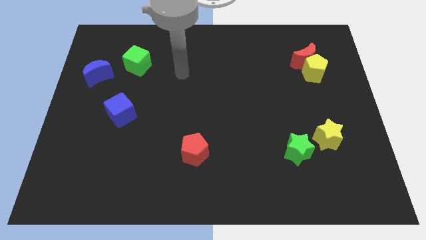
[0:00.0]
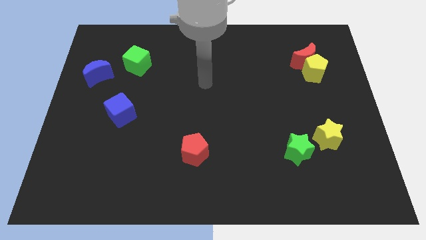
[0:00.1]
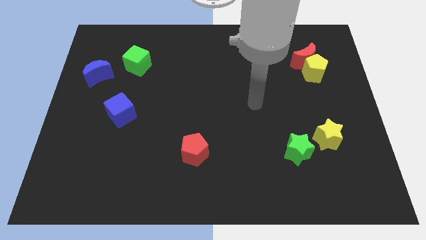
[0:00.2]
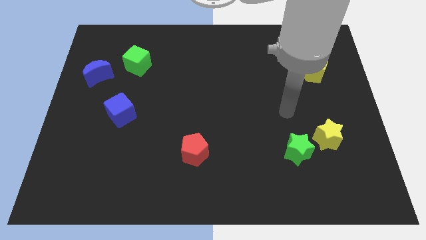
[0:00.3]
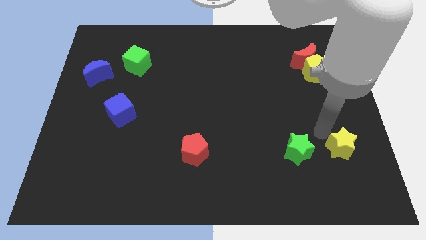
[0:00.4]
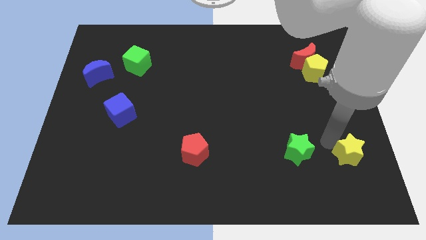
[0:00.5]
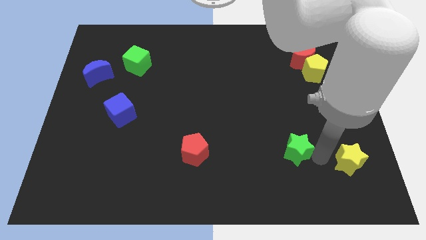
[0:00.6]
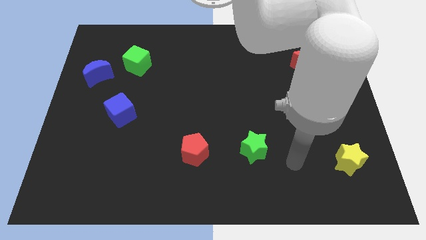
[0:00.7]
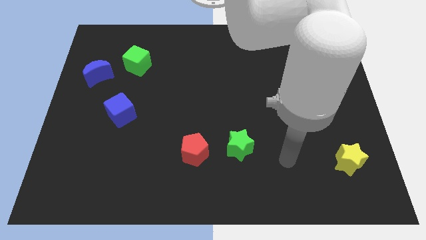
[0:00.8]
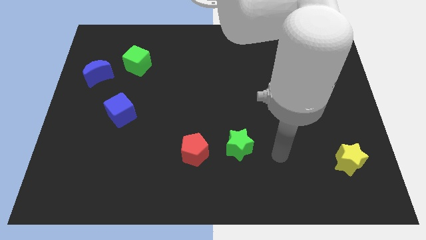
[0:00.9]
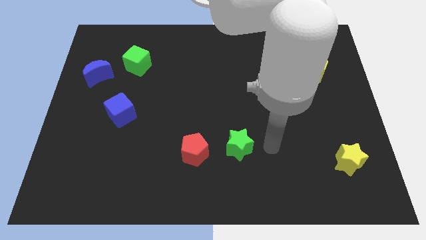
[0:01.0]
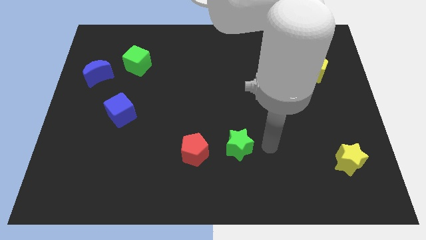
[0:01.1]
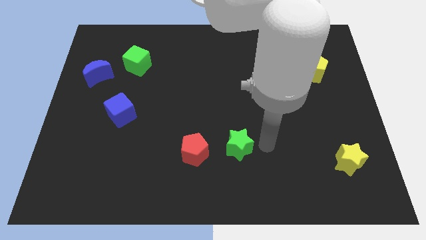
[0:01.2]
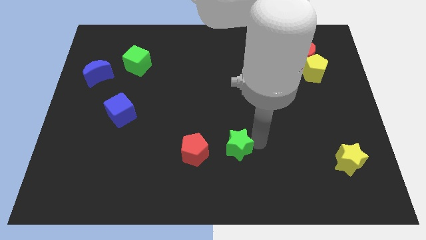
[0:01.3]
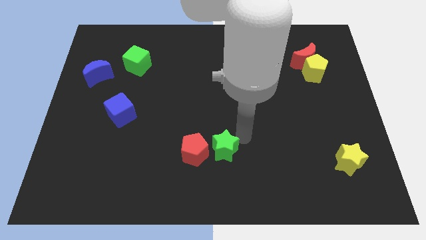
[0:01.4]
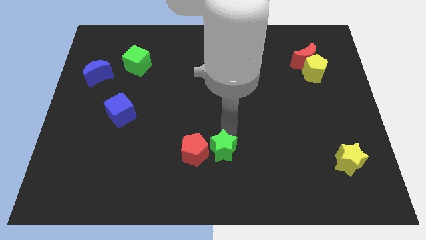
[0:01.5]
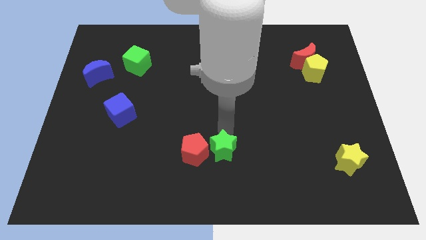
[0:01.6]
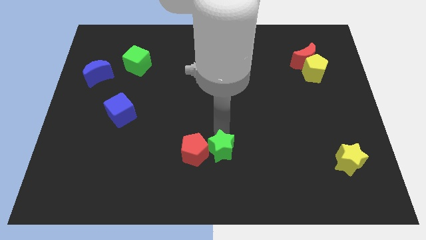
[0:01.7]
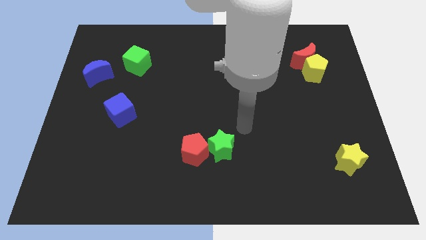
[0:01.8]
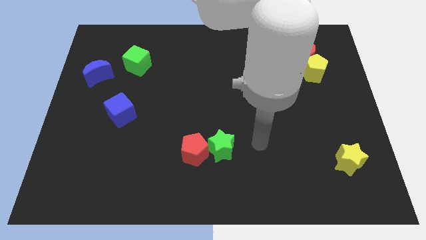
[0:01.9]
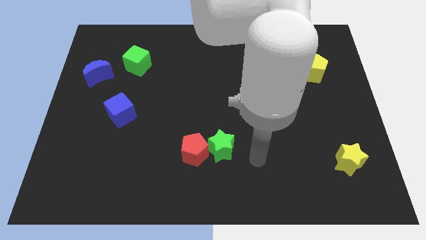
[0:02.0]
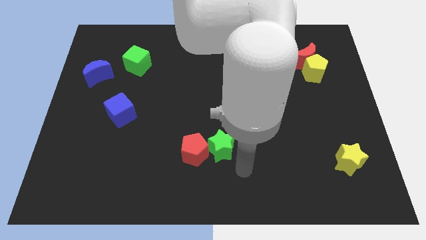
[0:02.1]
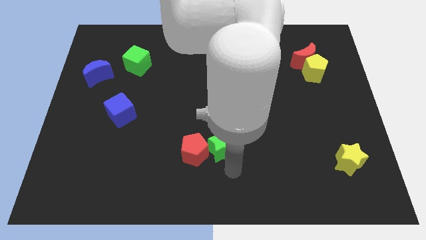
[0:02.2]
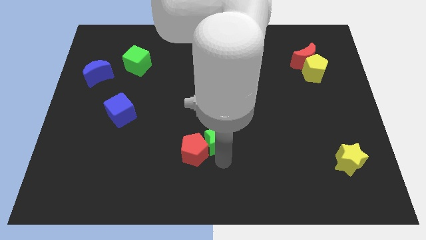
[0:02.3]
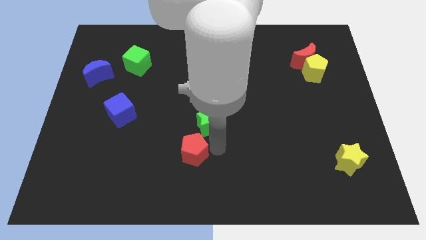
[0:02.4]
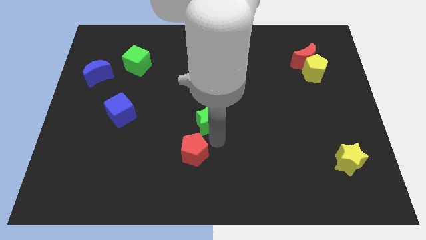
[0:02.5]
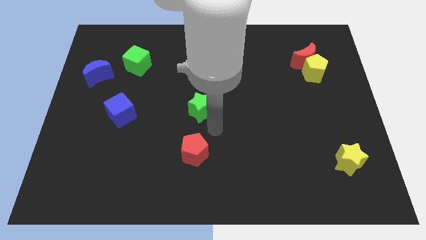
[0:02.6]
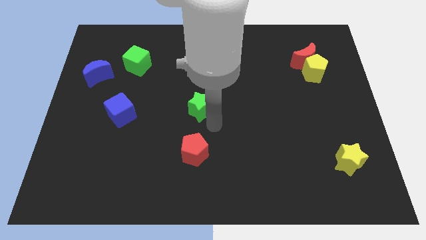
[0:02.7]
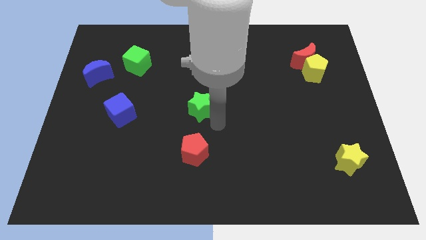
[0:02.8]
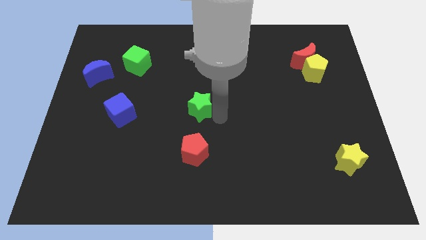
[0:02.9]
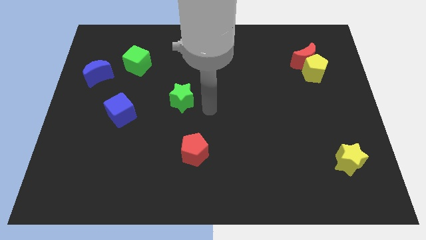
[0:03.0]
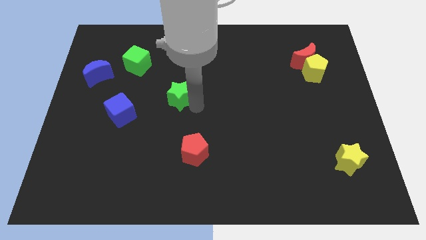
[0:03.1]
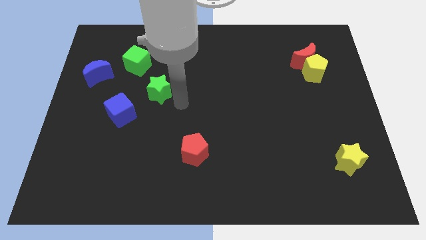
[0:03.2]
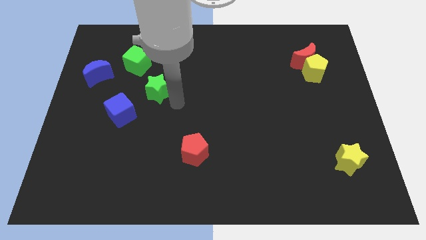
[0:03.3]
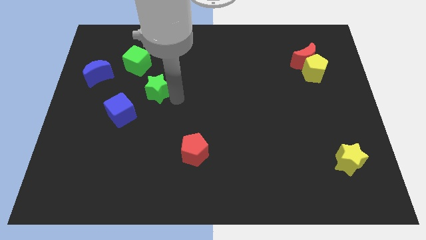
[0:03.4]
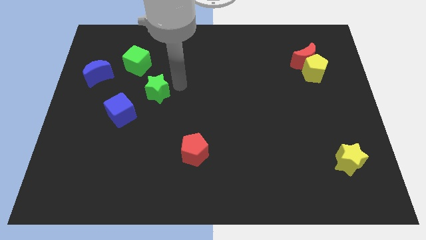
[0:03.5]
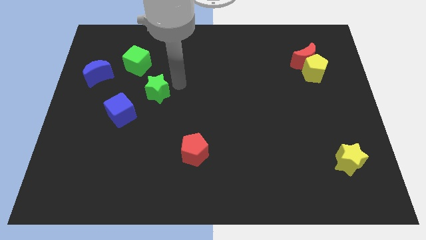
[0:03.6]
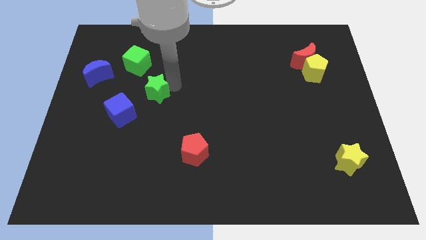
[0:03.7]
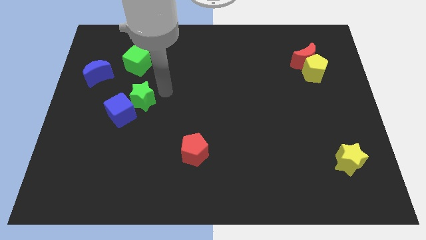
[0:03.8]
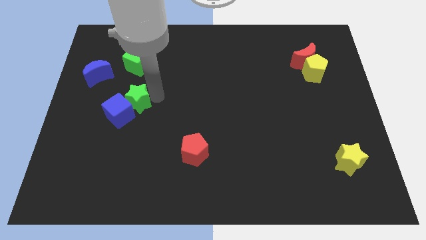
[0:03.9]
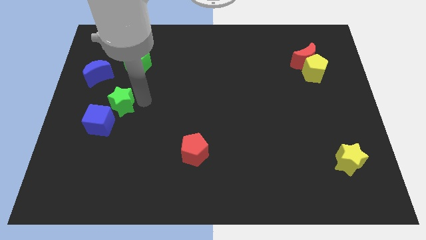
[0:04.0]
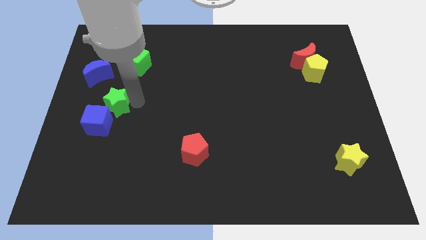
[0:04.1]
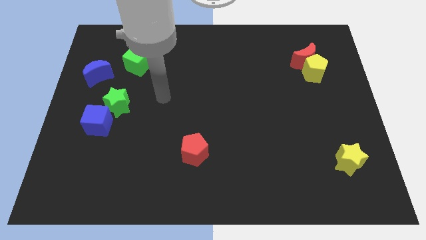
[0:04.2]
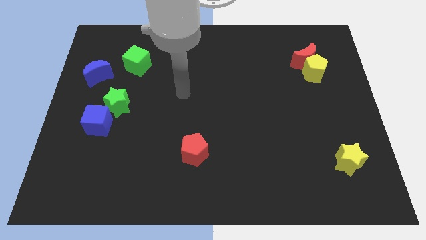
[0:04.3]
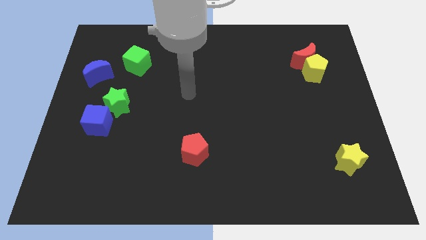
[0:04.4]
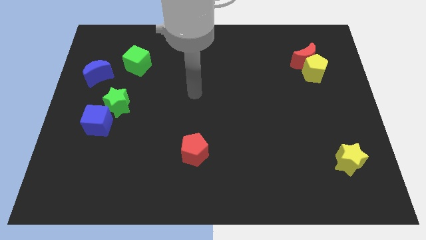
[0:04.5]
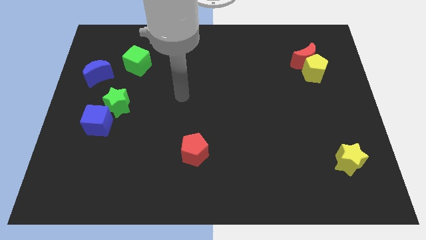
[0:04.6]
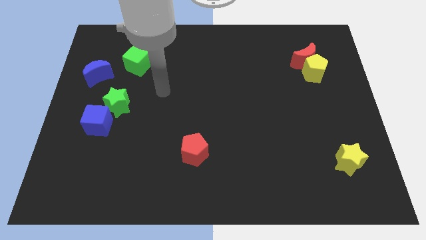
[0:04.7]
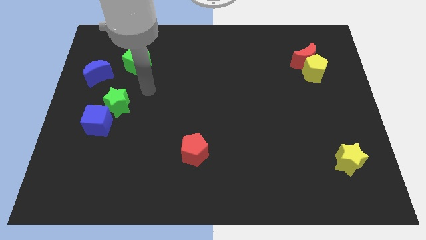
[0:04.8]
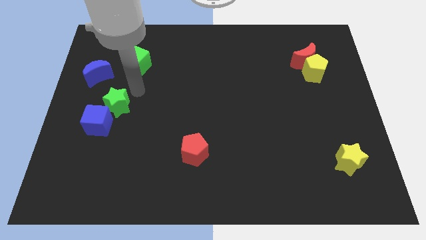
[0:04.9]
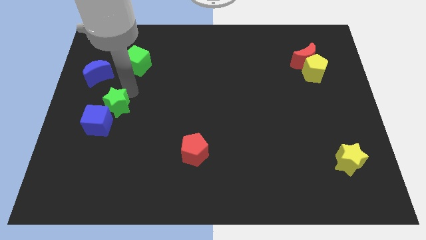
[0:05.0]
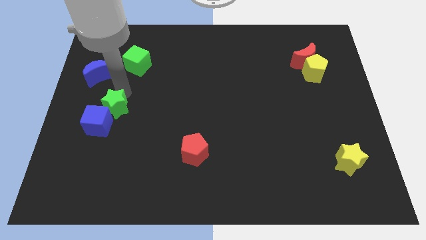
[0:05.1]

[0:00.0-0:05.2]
put the green star next to the blue cube

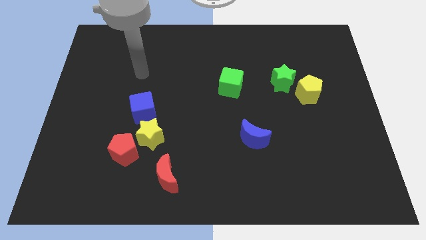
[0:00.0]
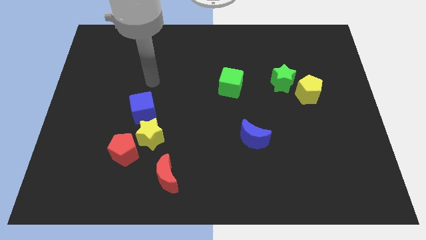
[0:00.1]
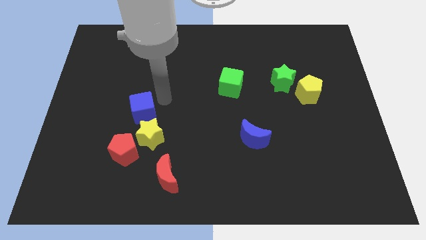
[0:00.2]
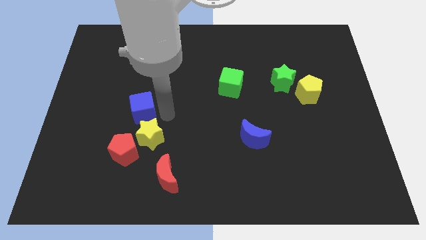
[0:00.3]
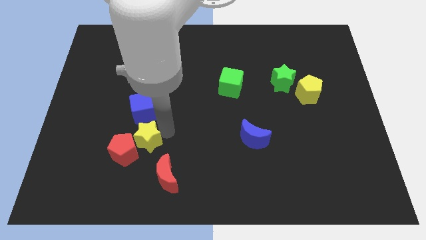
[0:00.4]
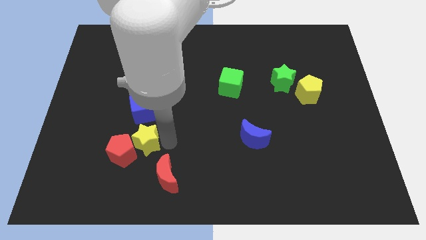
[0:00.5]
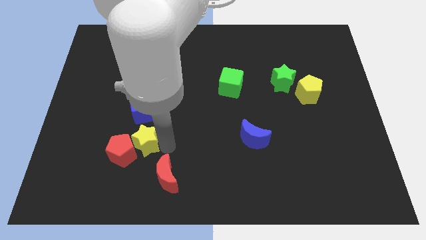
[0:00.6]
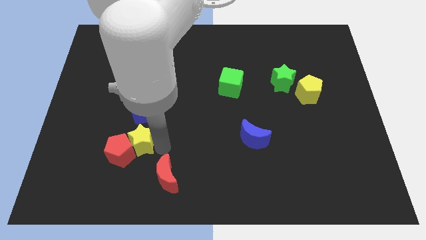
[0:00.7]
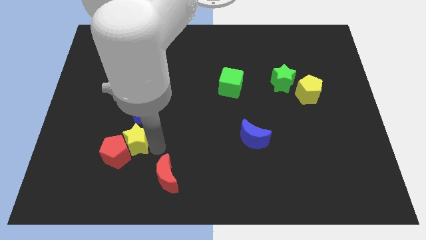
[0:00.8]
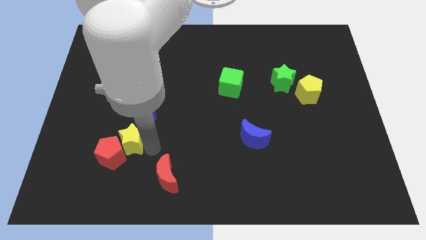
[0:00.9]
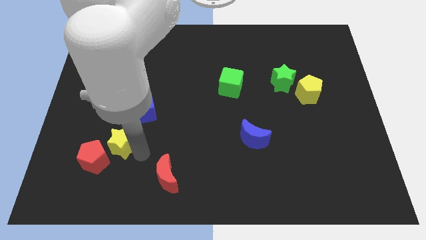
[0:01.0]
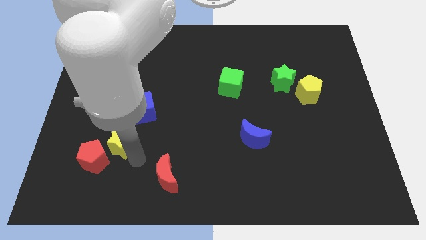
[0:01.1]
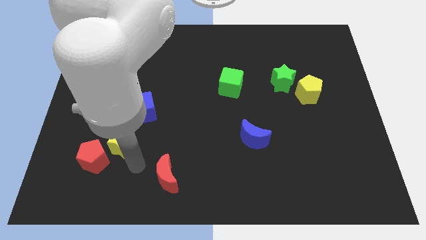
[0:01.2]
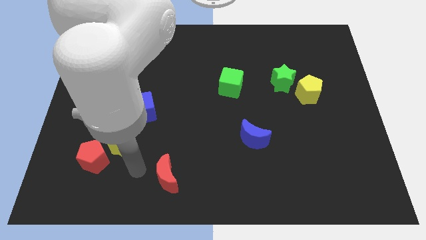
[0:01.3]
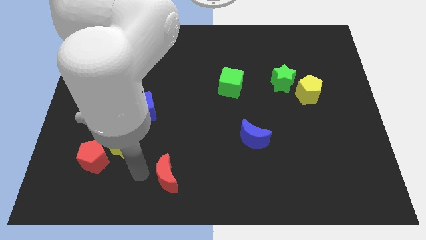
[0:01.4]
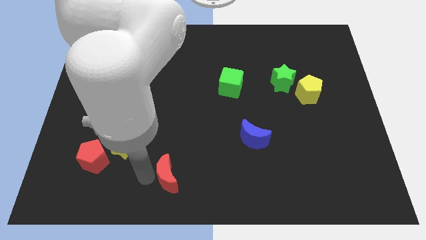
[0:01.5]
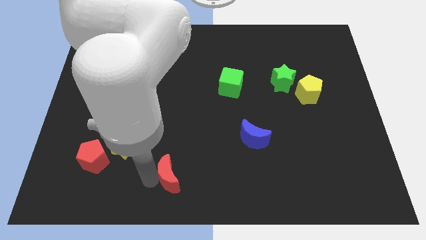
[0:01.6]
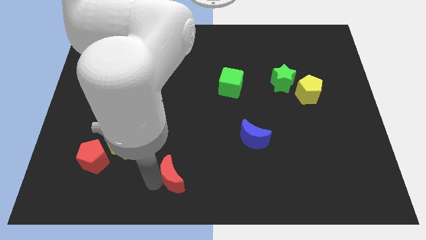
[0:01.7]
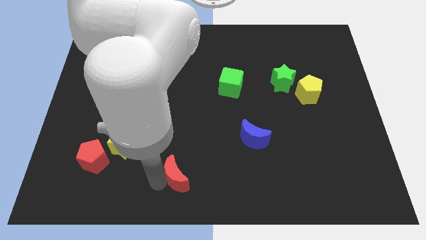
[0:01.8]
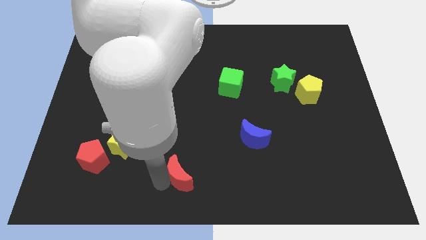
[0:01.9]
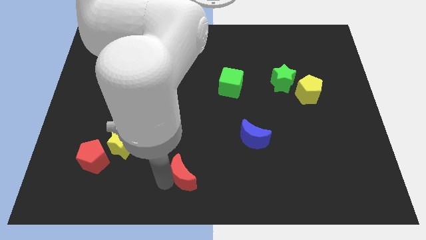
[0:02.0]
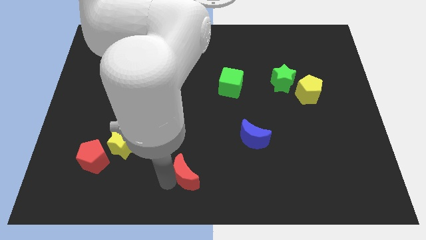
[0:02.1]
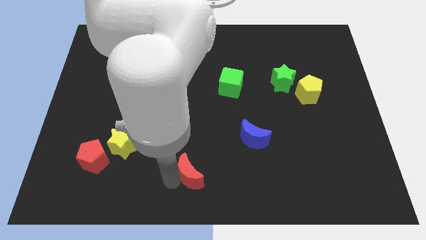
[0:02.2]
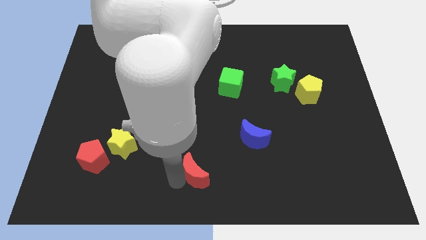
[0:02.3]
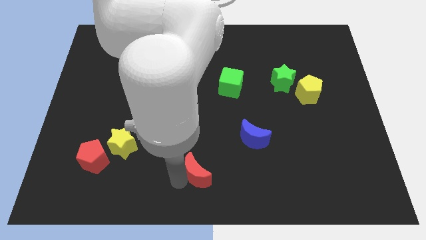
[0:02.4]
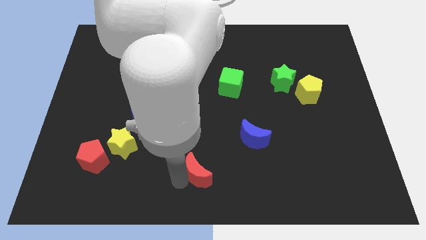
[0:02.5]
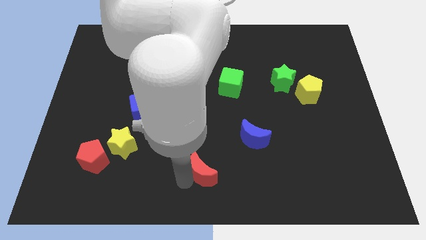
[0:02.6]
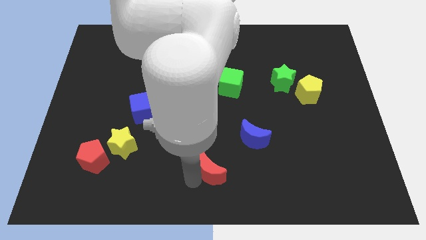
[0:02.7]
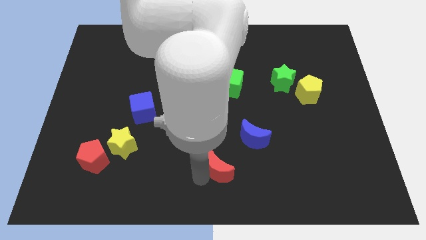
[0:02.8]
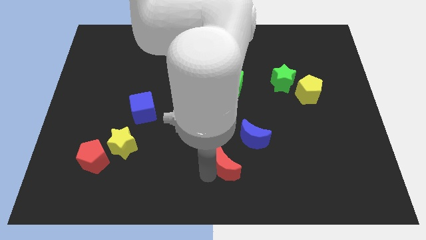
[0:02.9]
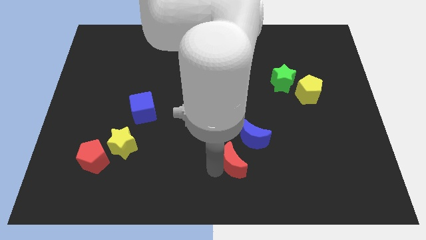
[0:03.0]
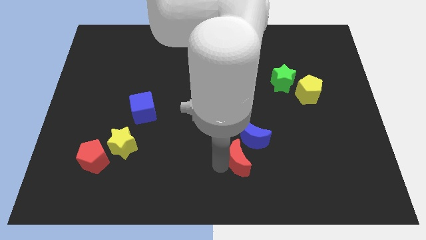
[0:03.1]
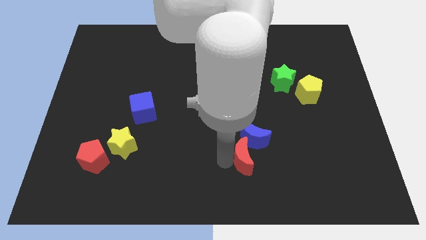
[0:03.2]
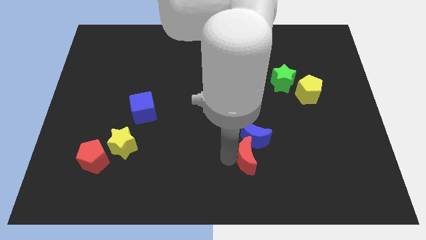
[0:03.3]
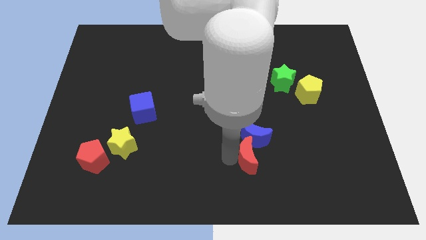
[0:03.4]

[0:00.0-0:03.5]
slide the red moon to the blue moon
